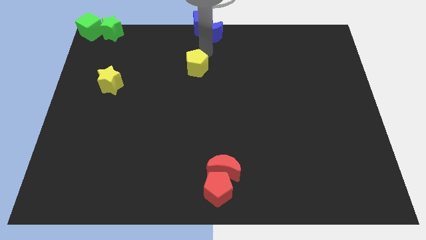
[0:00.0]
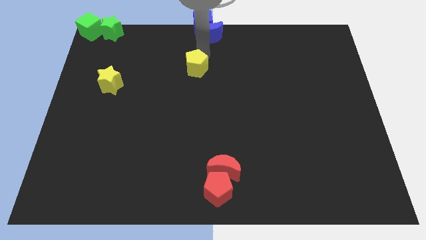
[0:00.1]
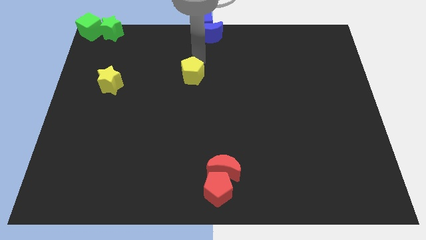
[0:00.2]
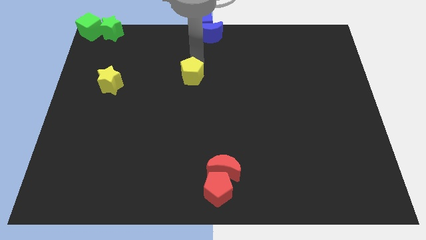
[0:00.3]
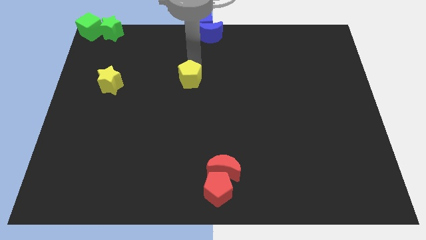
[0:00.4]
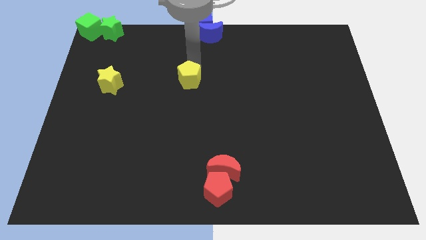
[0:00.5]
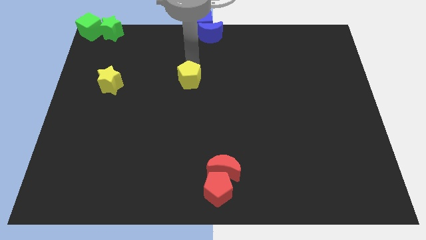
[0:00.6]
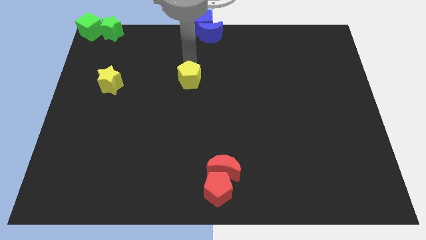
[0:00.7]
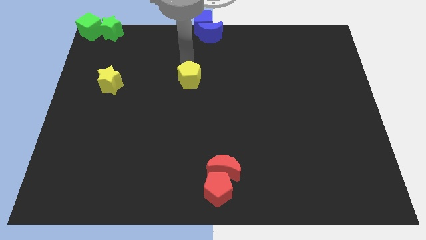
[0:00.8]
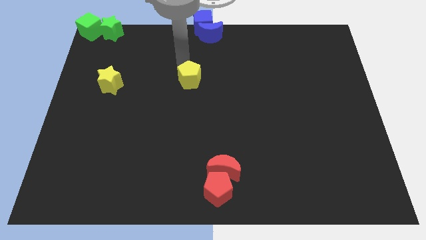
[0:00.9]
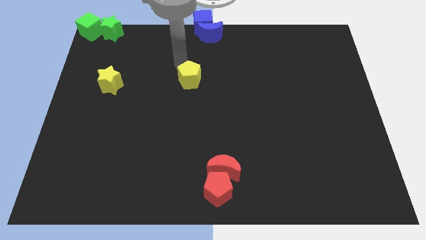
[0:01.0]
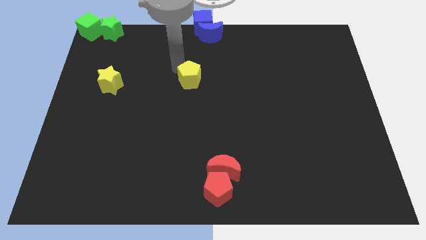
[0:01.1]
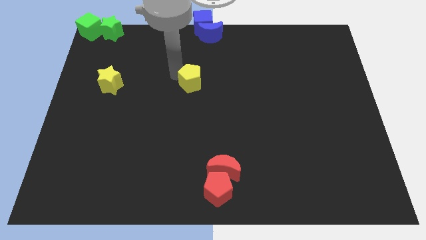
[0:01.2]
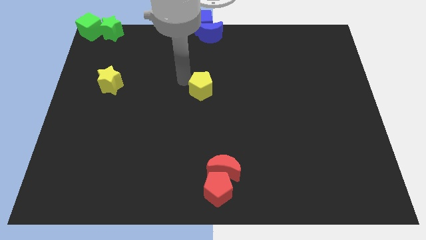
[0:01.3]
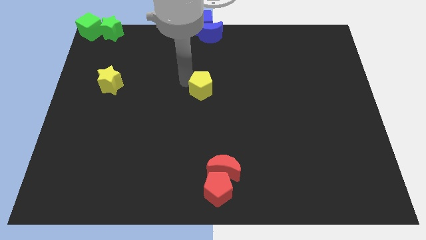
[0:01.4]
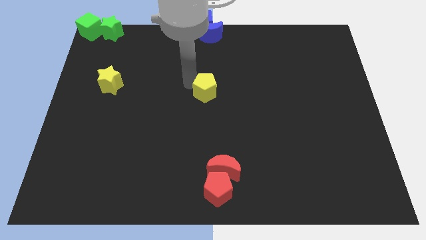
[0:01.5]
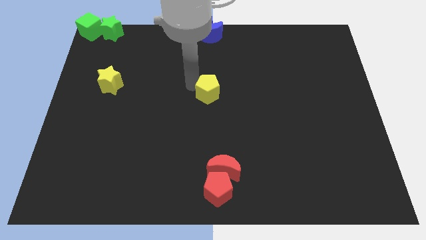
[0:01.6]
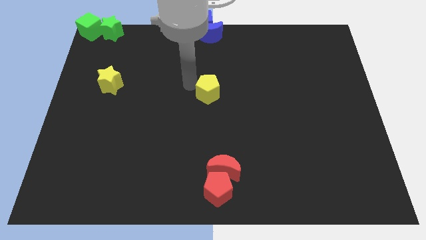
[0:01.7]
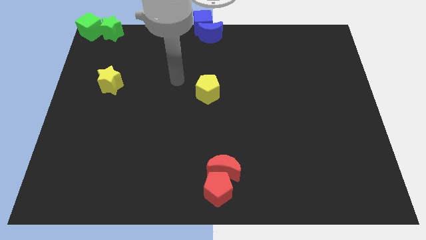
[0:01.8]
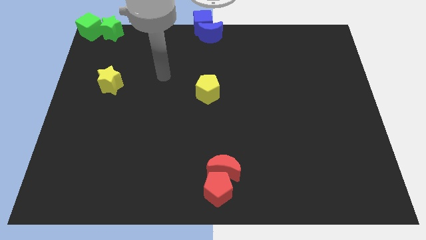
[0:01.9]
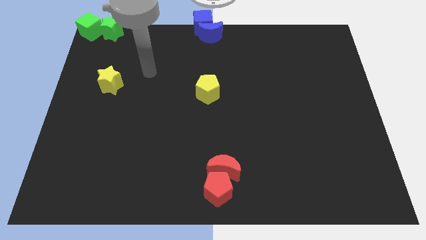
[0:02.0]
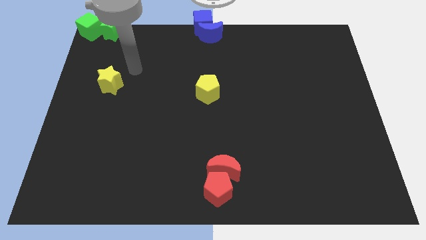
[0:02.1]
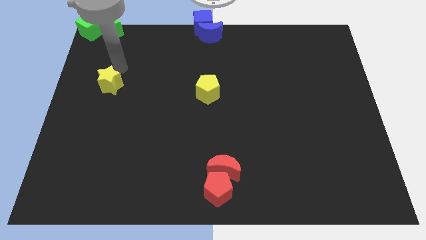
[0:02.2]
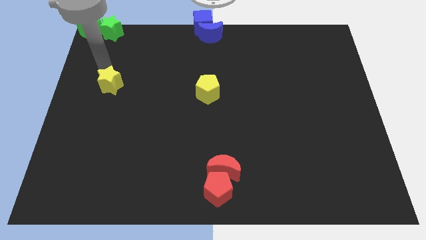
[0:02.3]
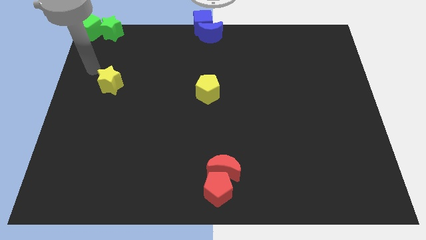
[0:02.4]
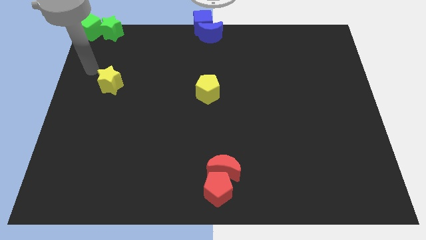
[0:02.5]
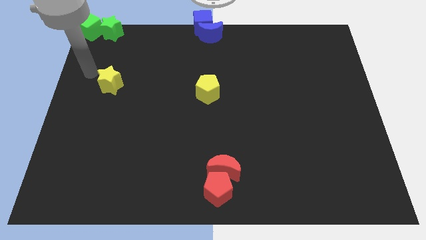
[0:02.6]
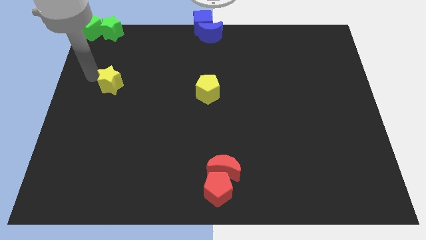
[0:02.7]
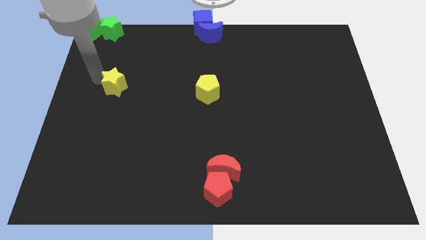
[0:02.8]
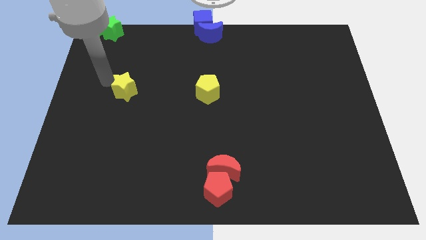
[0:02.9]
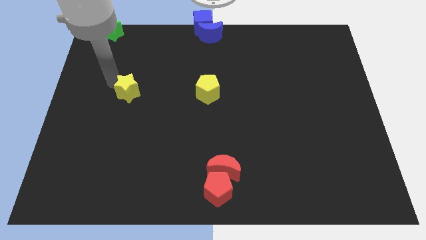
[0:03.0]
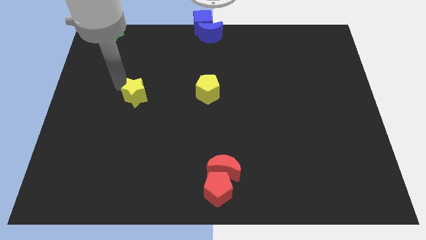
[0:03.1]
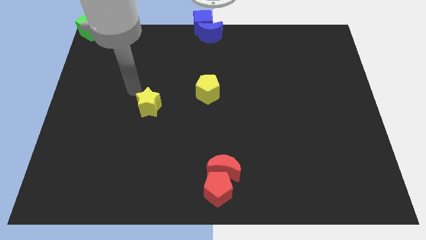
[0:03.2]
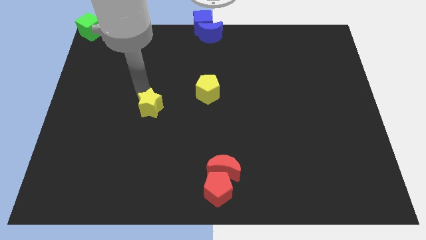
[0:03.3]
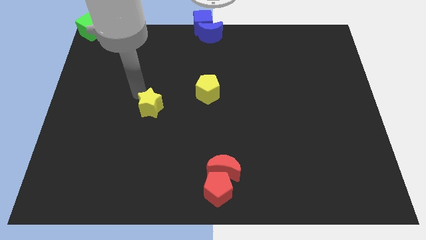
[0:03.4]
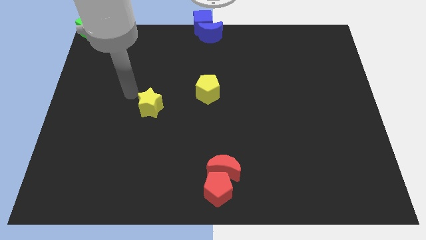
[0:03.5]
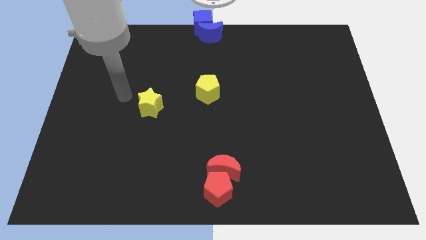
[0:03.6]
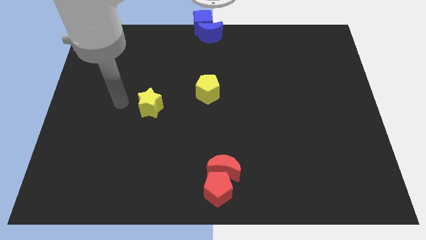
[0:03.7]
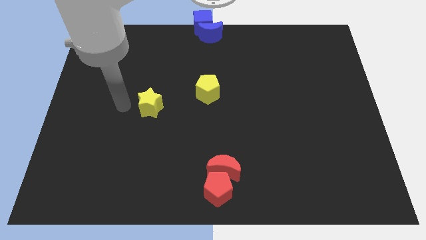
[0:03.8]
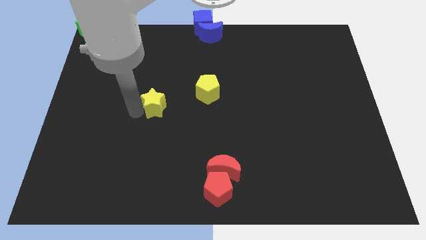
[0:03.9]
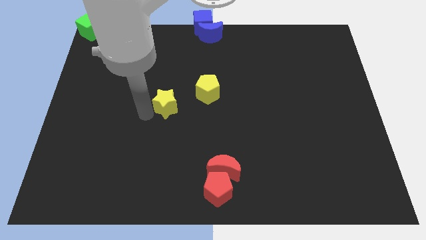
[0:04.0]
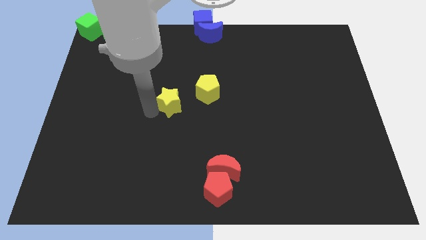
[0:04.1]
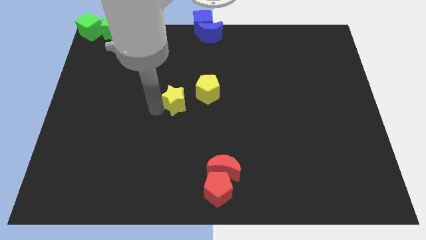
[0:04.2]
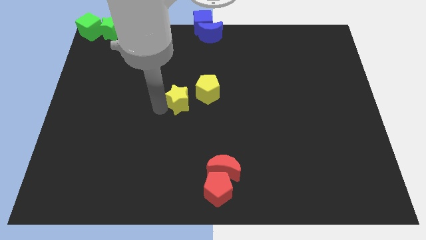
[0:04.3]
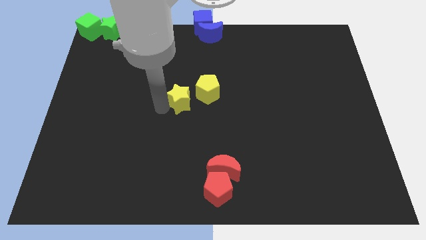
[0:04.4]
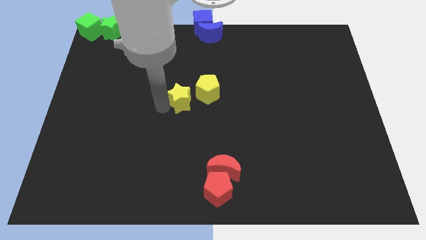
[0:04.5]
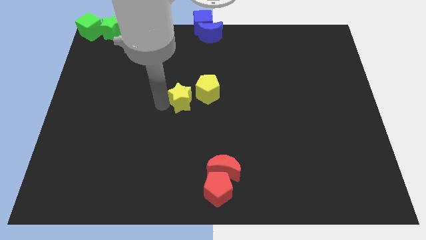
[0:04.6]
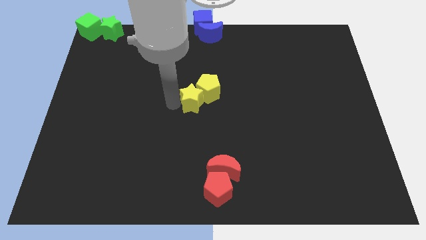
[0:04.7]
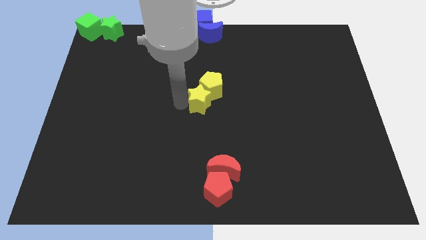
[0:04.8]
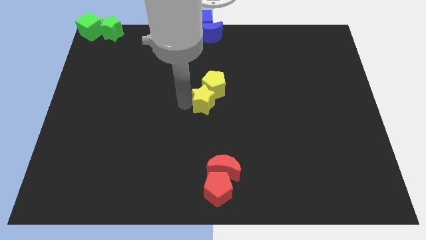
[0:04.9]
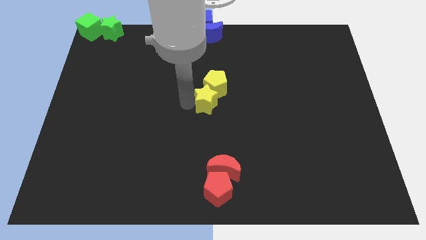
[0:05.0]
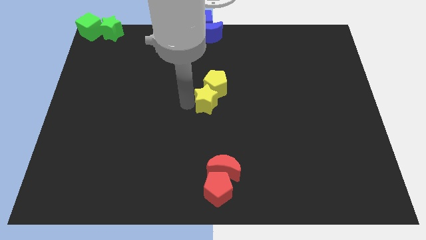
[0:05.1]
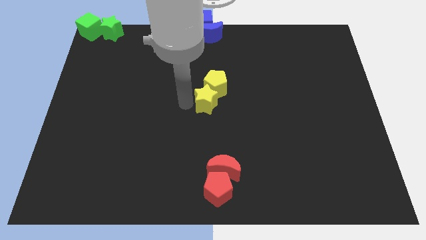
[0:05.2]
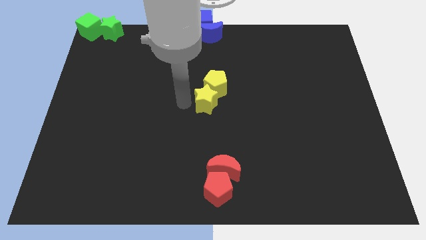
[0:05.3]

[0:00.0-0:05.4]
put both the yellow blocks at the center of the board

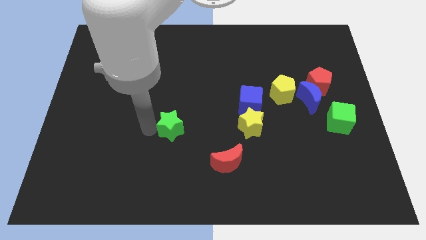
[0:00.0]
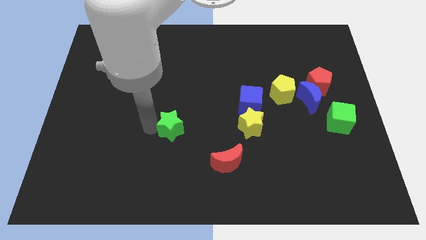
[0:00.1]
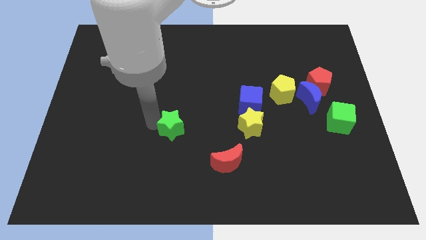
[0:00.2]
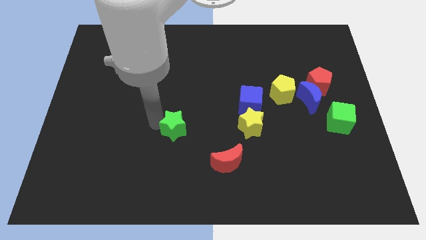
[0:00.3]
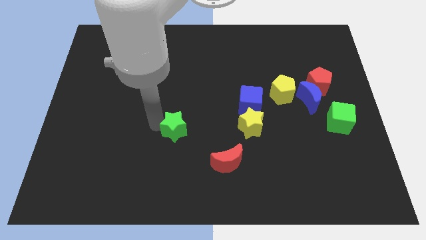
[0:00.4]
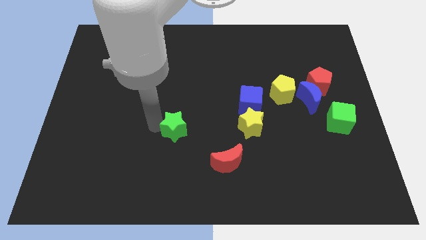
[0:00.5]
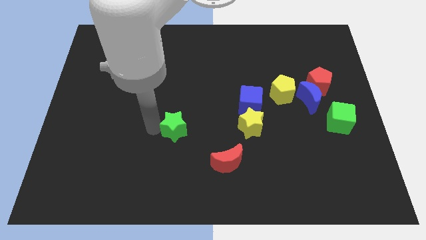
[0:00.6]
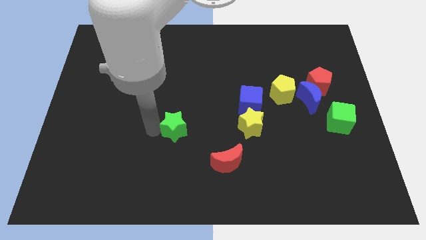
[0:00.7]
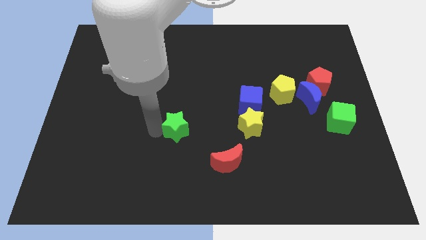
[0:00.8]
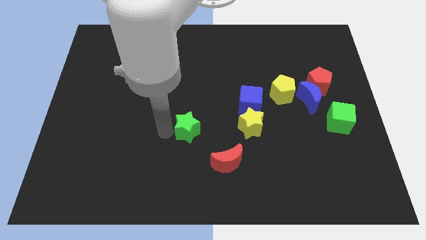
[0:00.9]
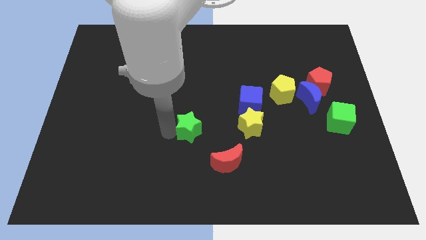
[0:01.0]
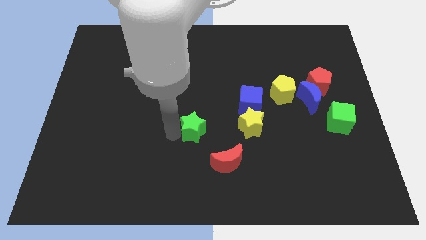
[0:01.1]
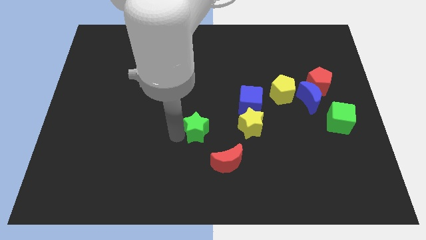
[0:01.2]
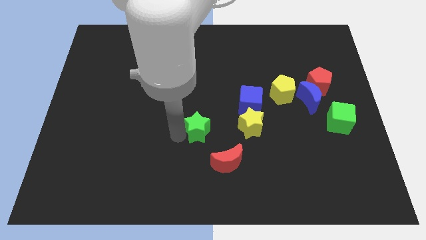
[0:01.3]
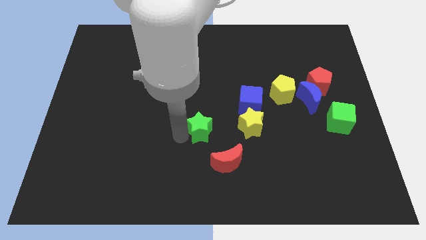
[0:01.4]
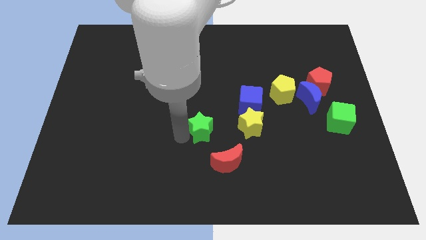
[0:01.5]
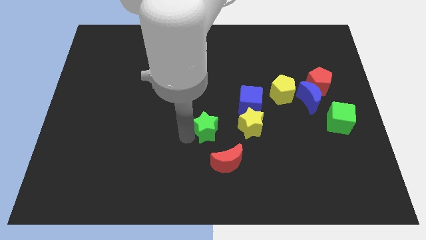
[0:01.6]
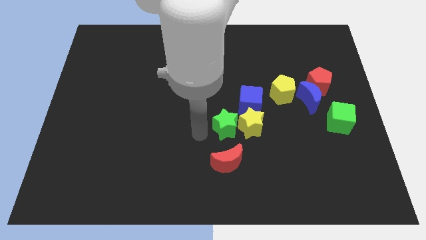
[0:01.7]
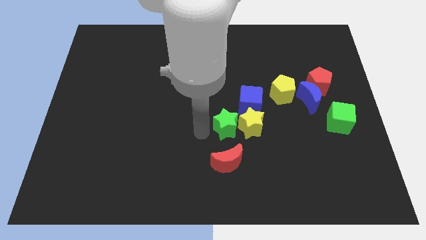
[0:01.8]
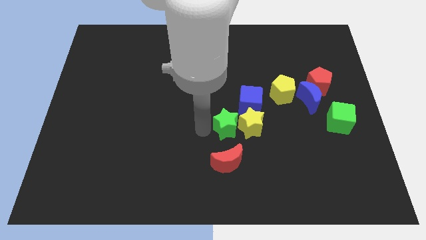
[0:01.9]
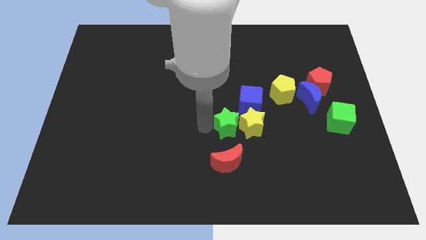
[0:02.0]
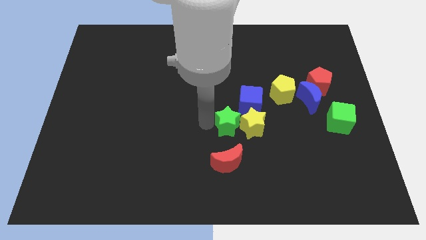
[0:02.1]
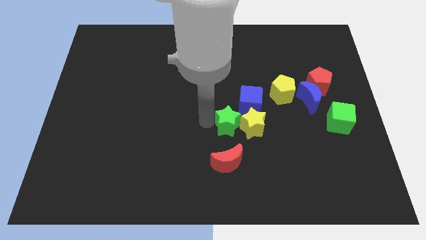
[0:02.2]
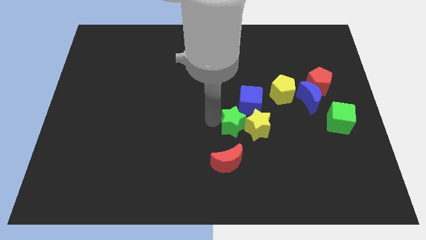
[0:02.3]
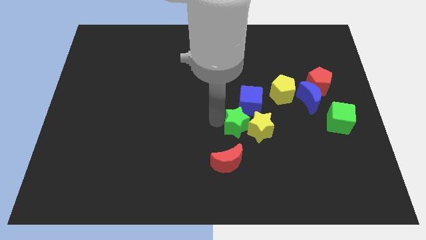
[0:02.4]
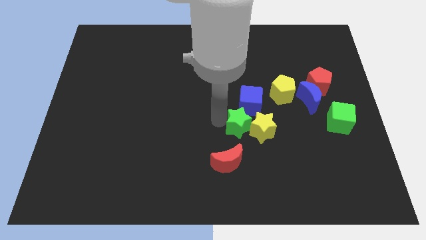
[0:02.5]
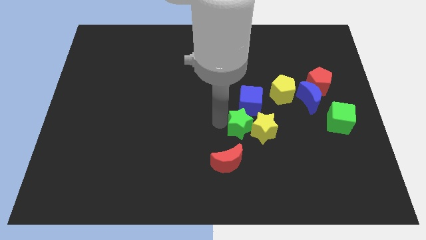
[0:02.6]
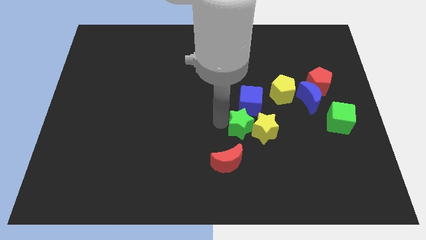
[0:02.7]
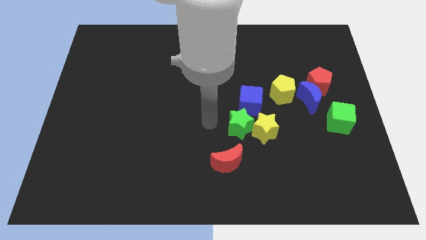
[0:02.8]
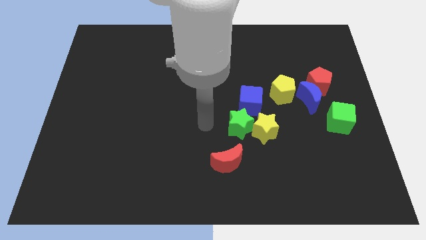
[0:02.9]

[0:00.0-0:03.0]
group up the two stars

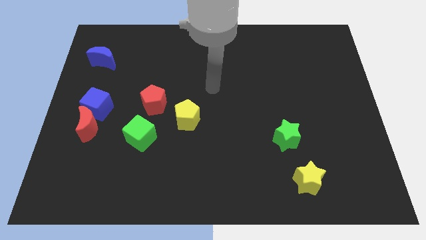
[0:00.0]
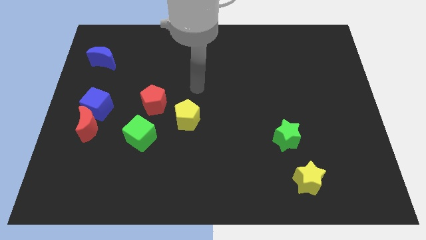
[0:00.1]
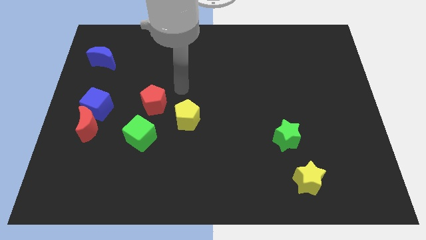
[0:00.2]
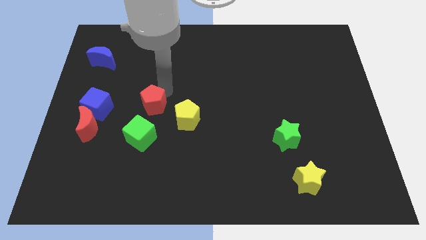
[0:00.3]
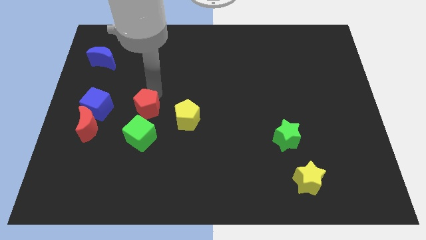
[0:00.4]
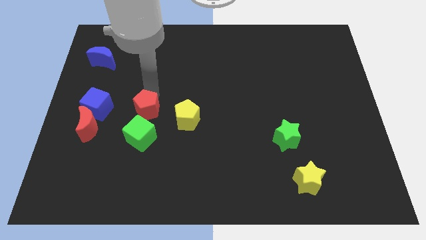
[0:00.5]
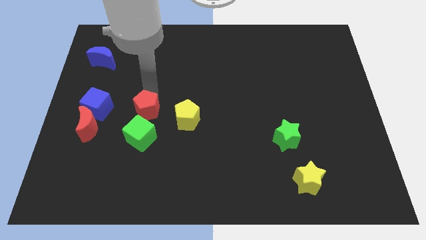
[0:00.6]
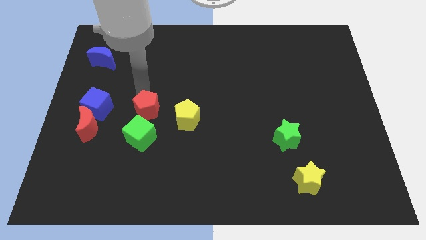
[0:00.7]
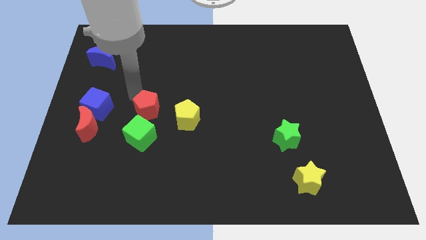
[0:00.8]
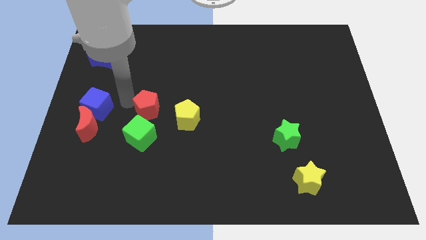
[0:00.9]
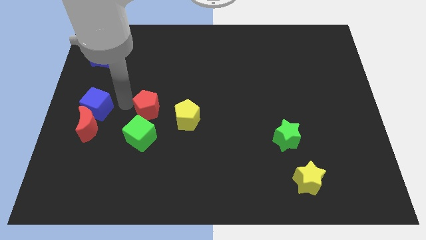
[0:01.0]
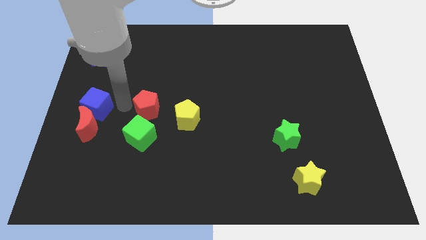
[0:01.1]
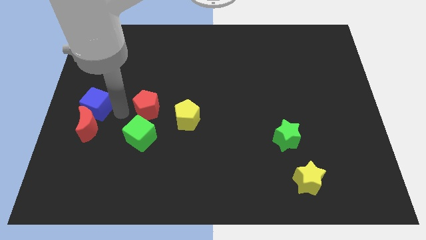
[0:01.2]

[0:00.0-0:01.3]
move the red pentagon slightly downwards
